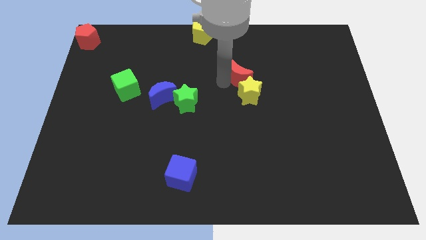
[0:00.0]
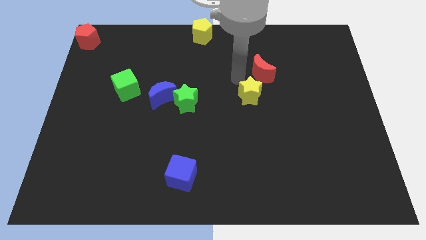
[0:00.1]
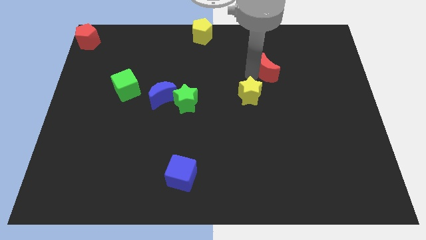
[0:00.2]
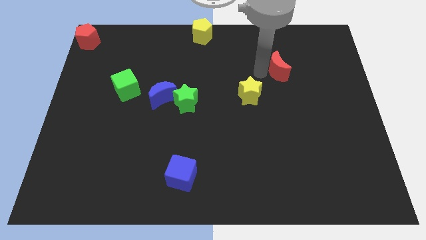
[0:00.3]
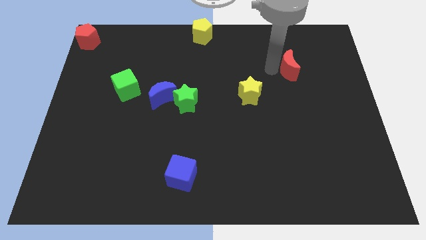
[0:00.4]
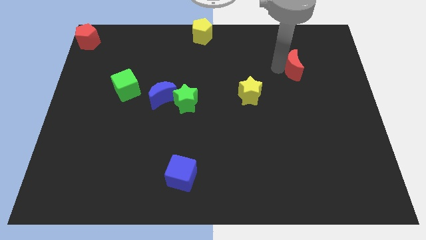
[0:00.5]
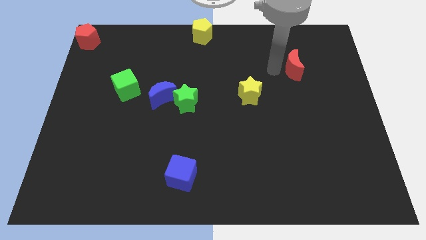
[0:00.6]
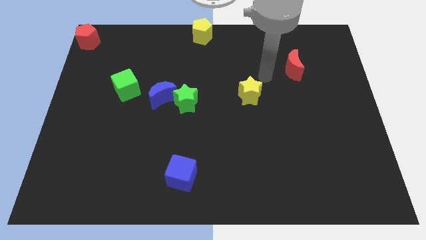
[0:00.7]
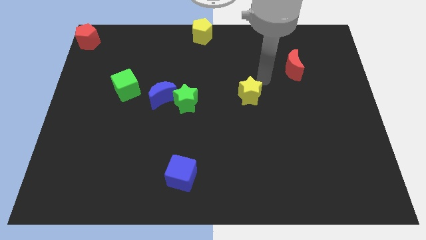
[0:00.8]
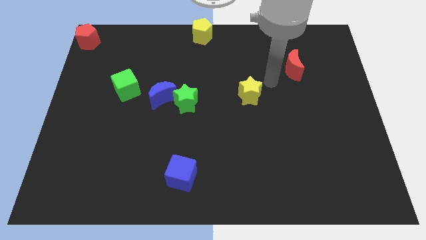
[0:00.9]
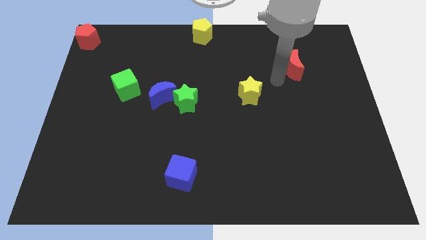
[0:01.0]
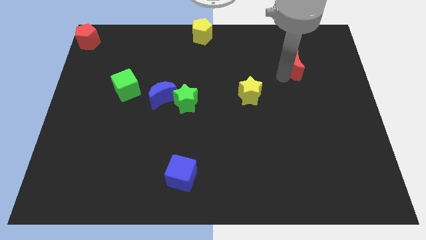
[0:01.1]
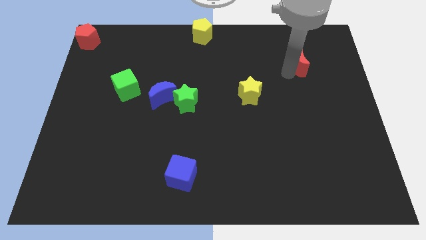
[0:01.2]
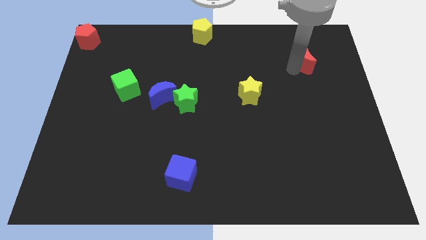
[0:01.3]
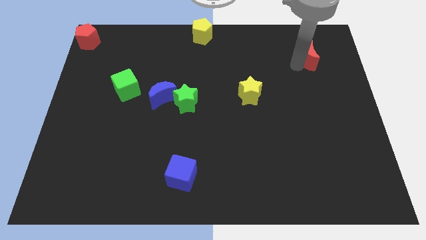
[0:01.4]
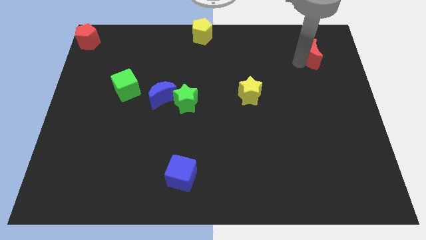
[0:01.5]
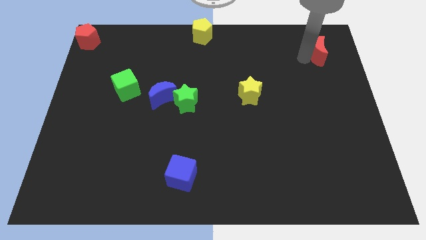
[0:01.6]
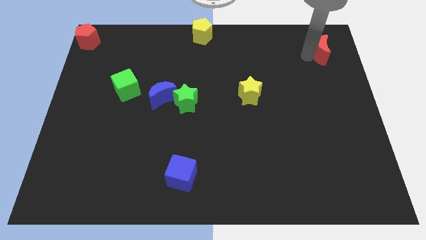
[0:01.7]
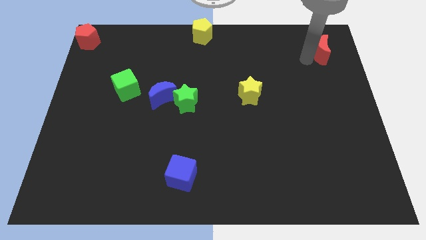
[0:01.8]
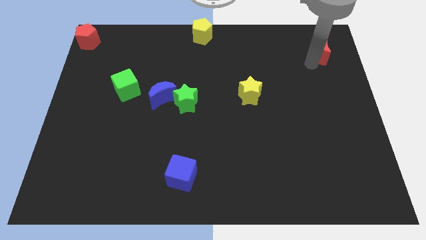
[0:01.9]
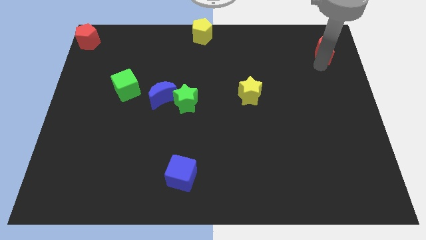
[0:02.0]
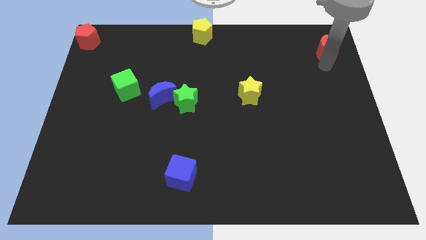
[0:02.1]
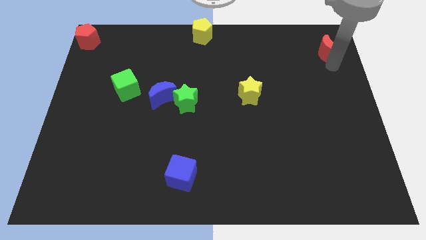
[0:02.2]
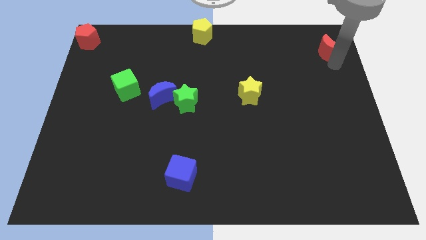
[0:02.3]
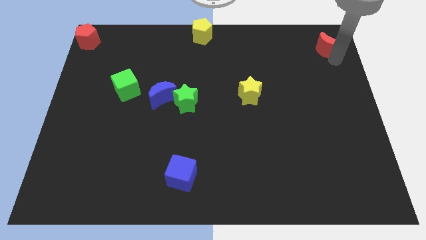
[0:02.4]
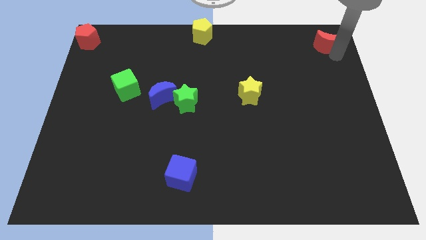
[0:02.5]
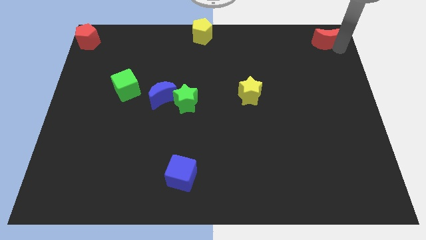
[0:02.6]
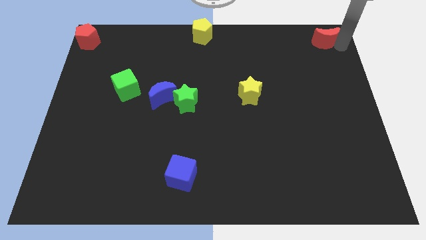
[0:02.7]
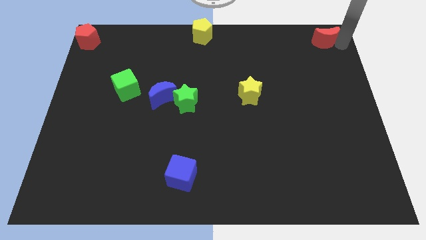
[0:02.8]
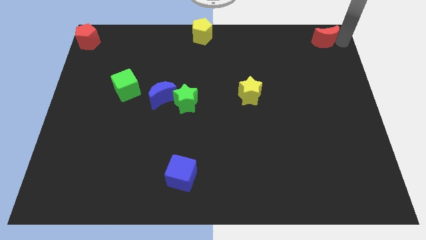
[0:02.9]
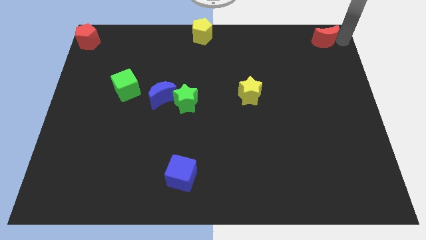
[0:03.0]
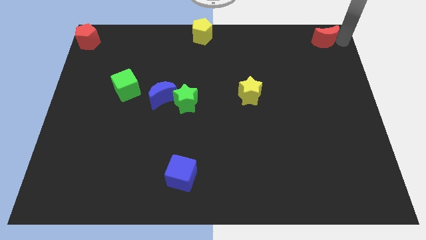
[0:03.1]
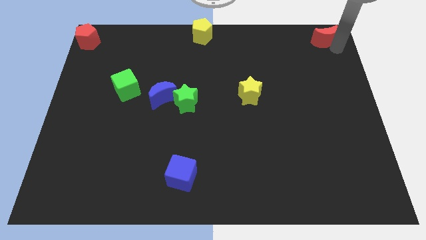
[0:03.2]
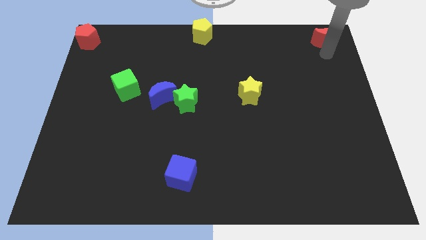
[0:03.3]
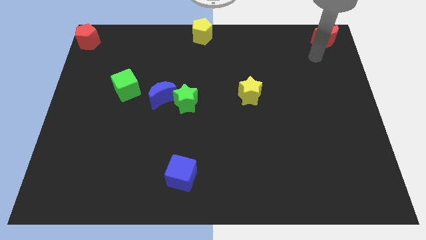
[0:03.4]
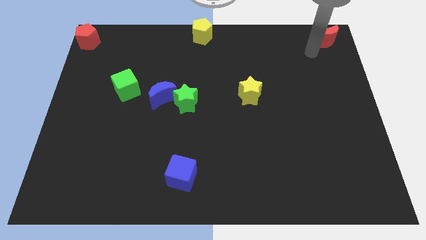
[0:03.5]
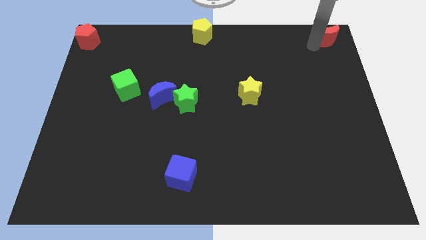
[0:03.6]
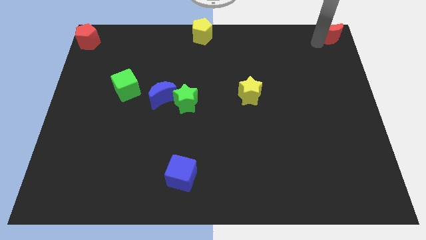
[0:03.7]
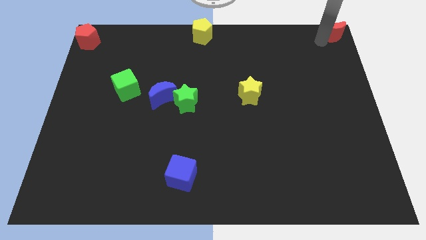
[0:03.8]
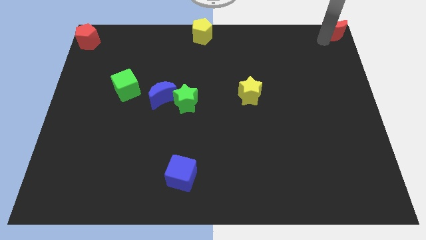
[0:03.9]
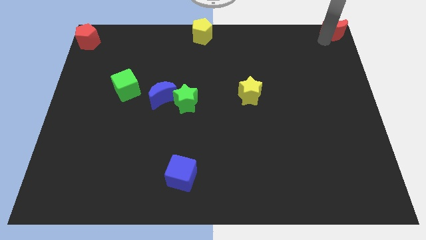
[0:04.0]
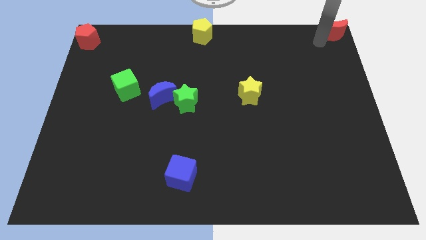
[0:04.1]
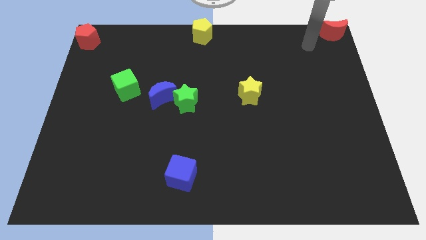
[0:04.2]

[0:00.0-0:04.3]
move the red moon to the top right of the board

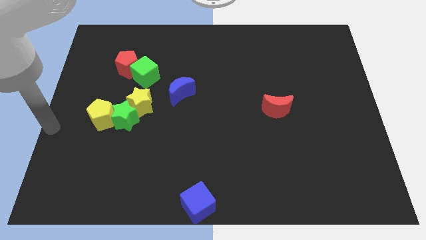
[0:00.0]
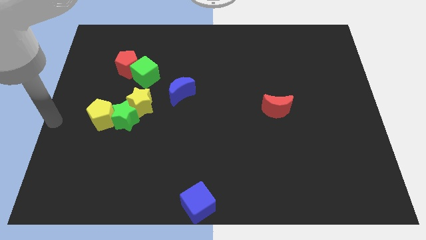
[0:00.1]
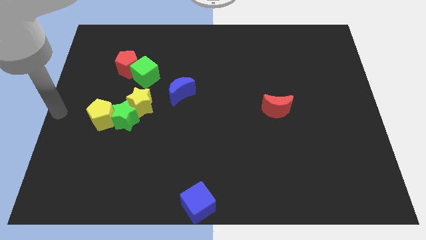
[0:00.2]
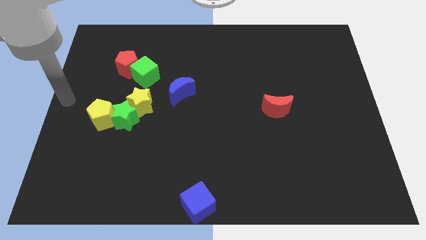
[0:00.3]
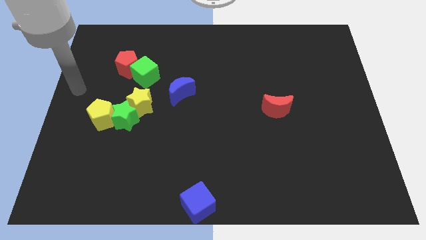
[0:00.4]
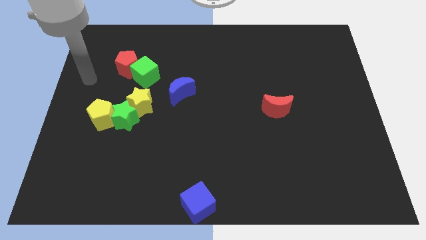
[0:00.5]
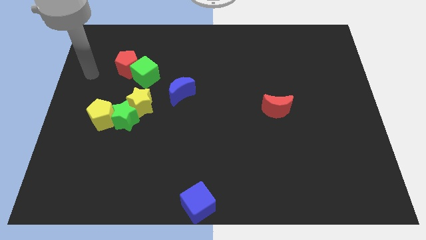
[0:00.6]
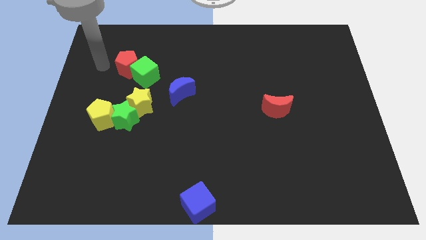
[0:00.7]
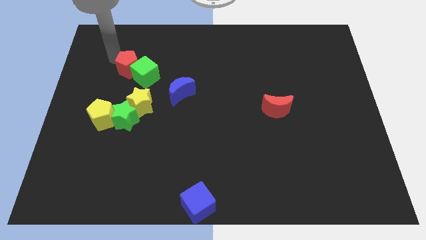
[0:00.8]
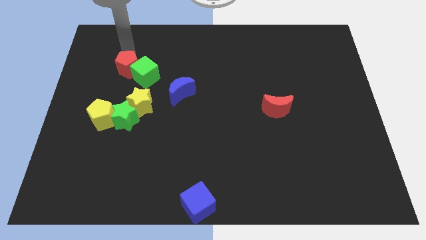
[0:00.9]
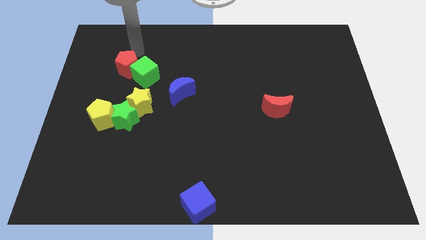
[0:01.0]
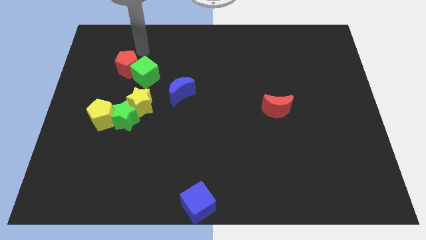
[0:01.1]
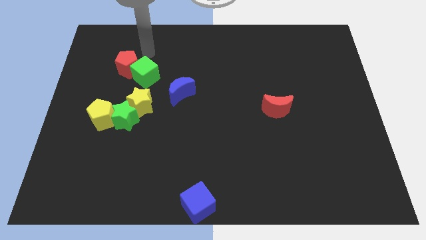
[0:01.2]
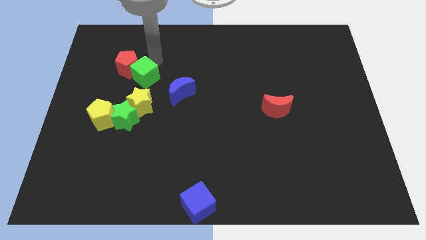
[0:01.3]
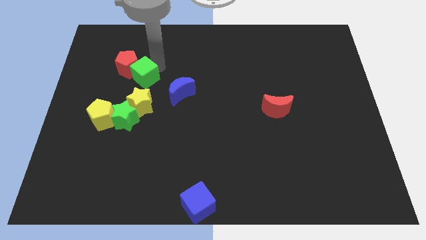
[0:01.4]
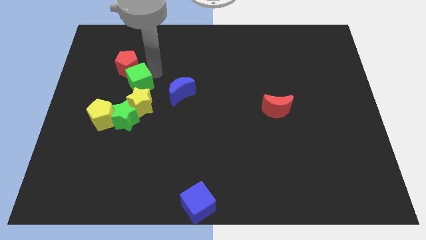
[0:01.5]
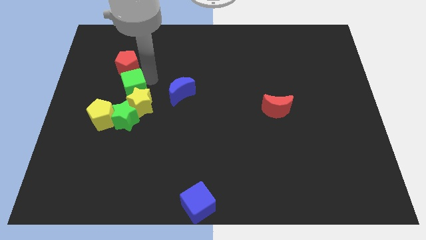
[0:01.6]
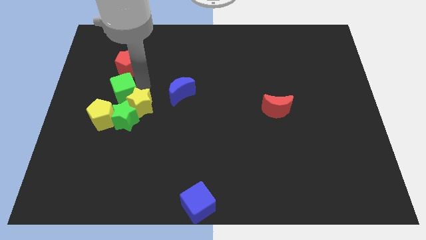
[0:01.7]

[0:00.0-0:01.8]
place the green cube in between the red pentagon and yellow star

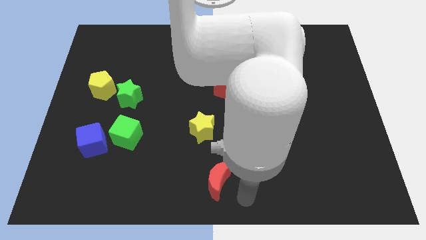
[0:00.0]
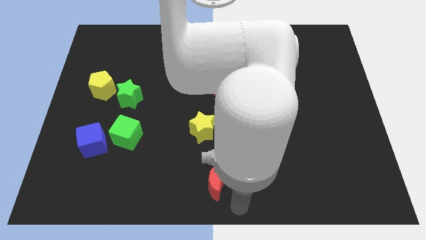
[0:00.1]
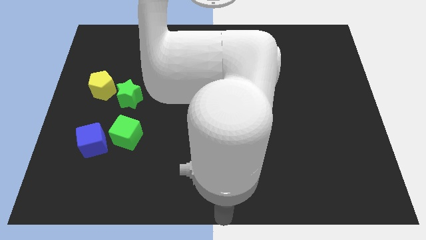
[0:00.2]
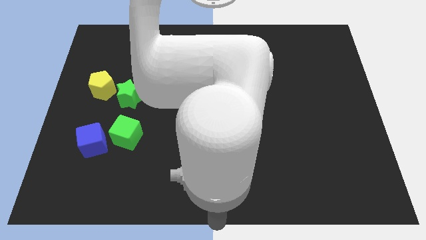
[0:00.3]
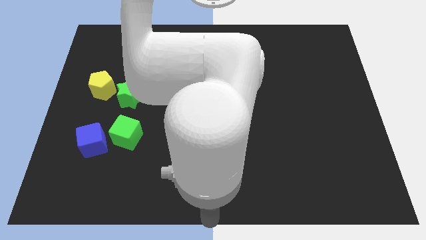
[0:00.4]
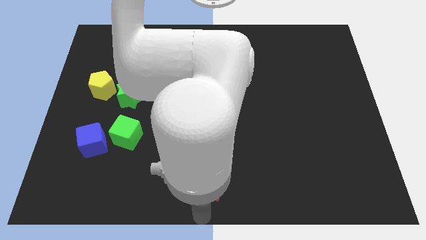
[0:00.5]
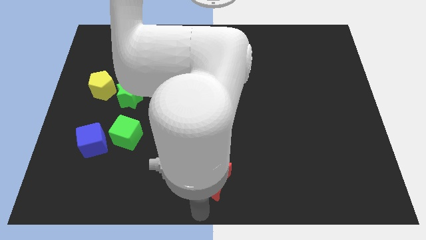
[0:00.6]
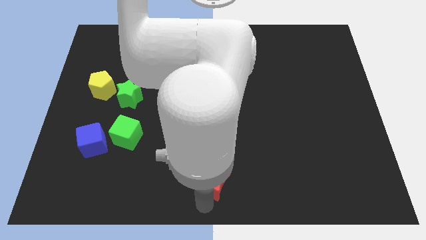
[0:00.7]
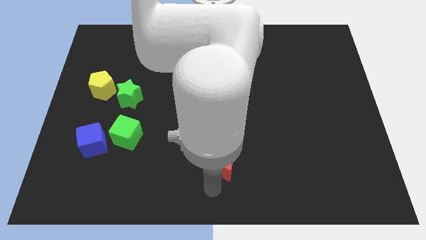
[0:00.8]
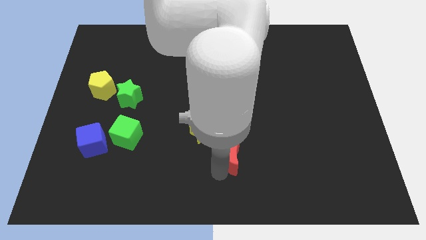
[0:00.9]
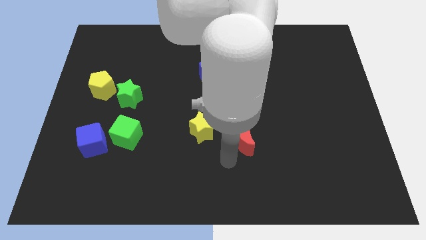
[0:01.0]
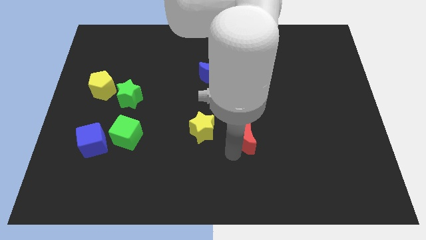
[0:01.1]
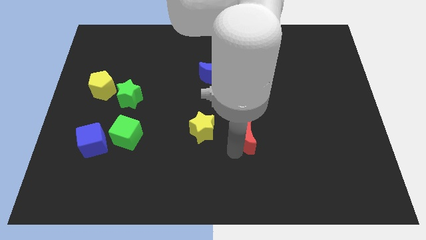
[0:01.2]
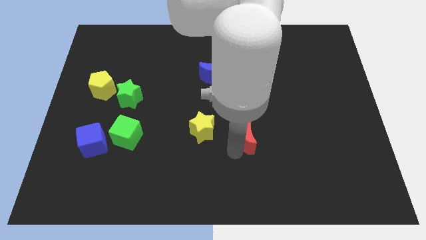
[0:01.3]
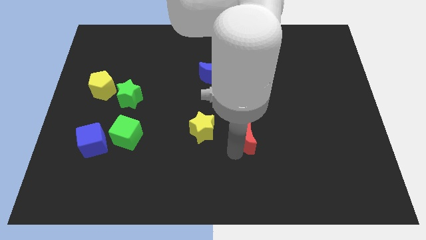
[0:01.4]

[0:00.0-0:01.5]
push the red moon to the bottom right of the yellow star

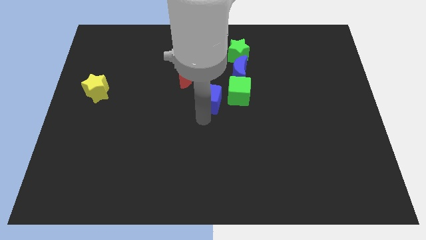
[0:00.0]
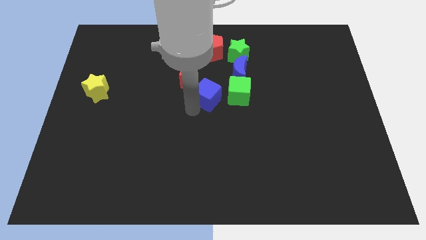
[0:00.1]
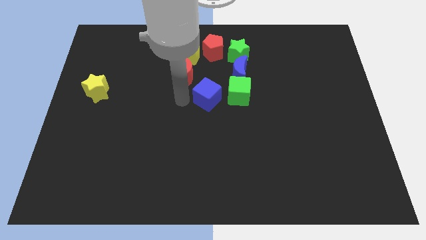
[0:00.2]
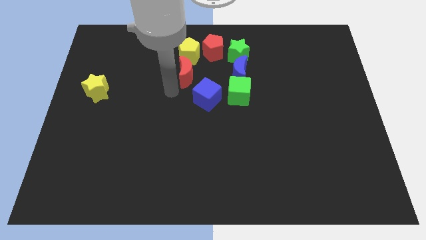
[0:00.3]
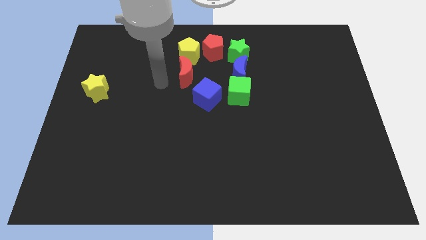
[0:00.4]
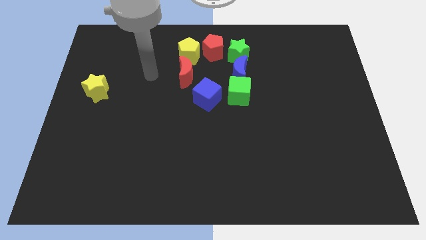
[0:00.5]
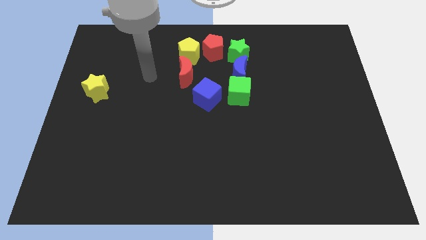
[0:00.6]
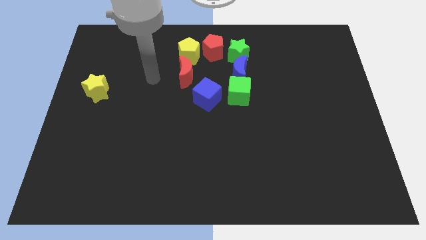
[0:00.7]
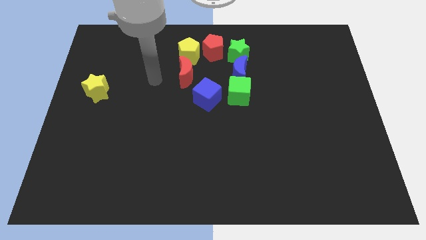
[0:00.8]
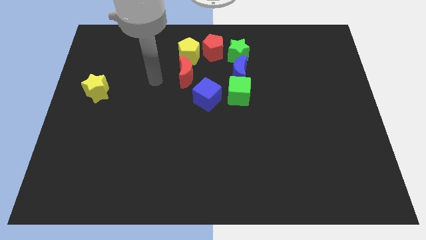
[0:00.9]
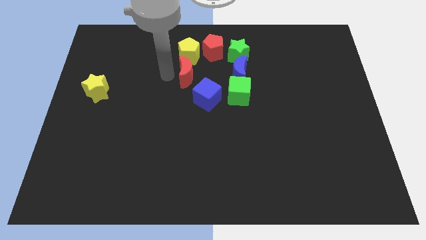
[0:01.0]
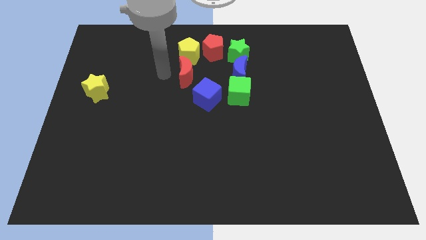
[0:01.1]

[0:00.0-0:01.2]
slightly move the blue cube to the center of the board

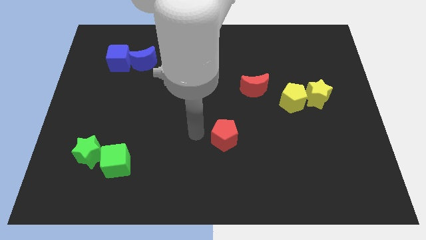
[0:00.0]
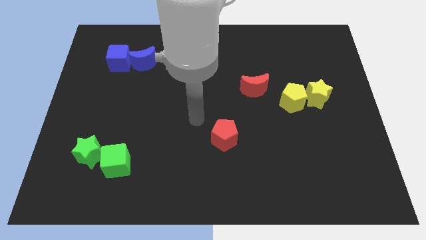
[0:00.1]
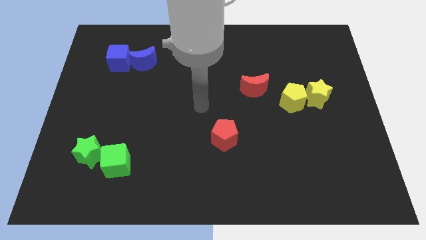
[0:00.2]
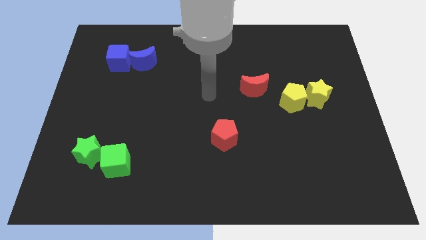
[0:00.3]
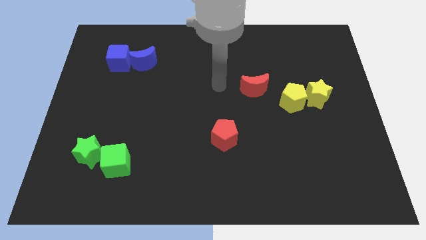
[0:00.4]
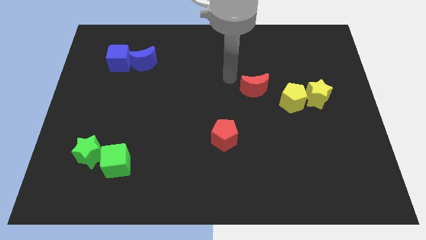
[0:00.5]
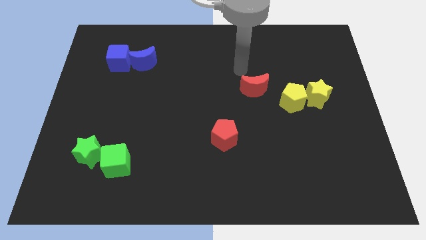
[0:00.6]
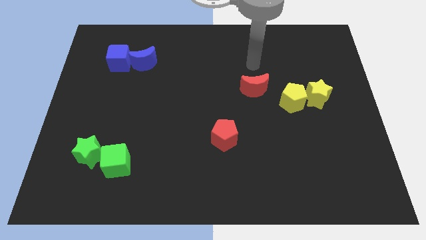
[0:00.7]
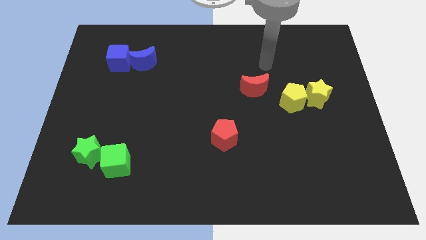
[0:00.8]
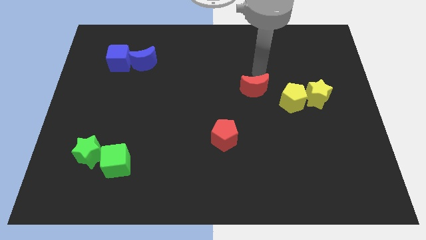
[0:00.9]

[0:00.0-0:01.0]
point your arm at the top of the red crescent
